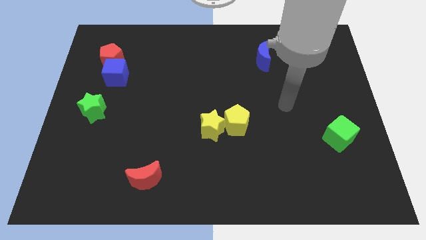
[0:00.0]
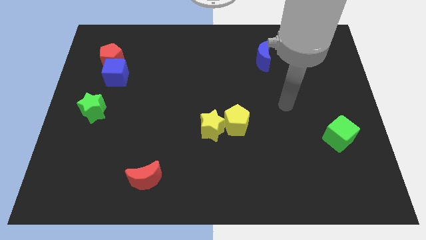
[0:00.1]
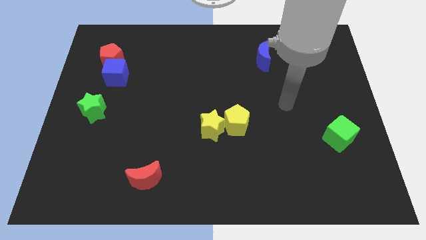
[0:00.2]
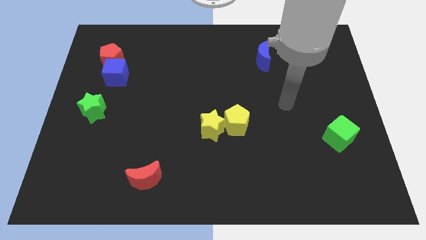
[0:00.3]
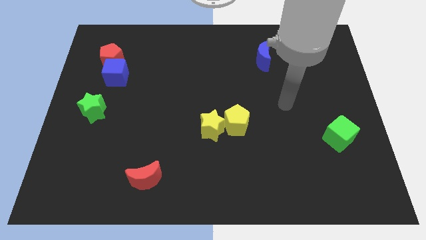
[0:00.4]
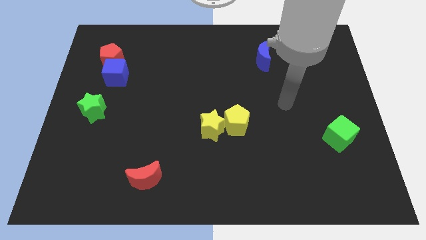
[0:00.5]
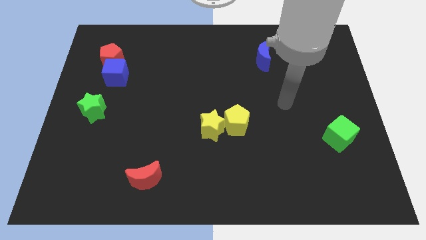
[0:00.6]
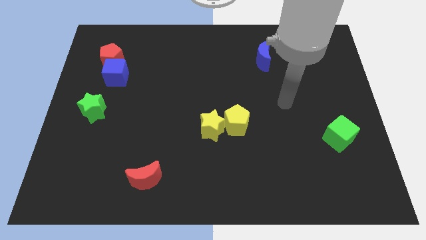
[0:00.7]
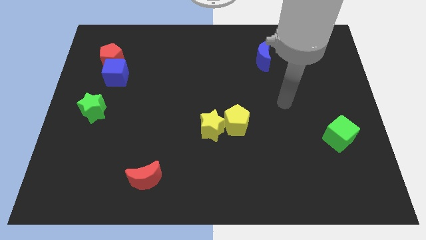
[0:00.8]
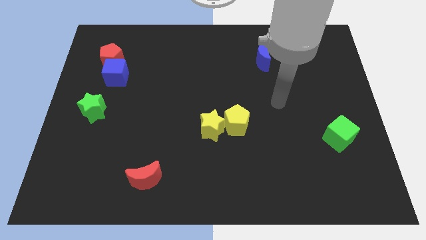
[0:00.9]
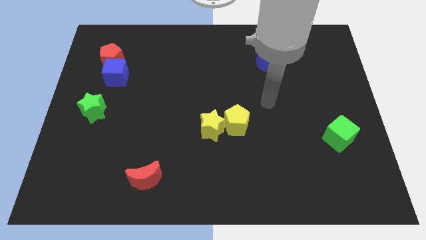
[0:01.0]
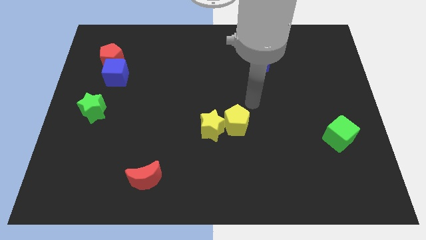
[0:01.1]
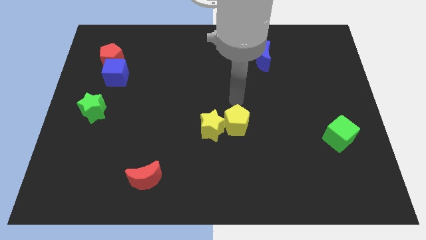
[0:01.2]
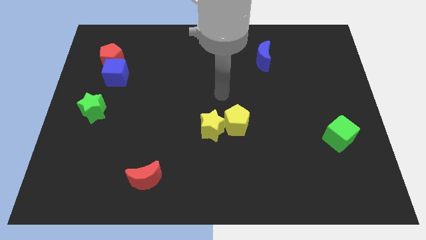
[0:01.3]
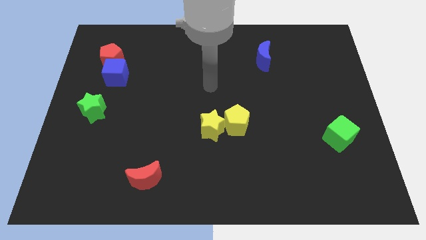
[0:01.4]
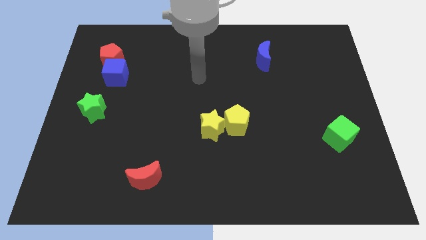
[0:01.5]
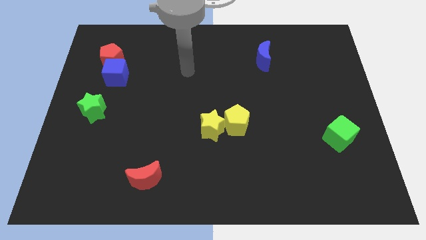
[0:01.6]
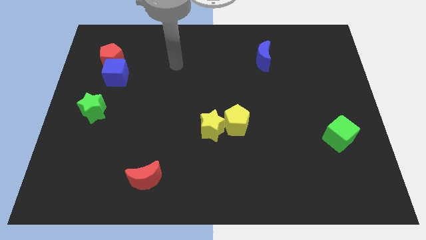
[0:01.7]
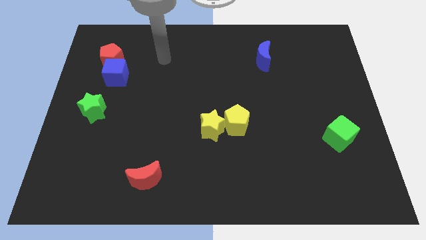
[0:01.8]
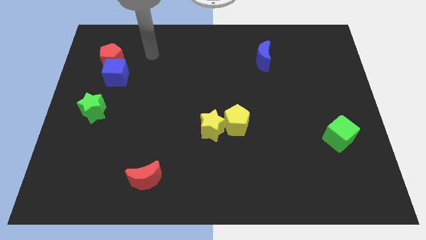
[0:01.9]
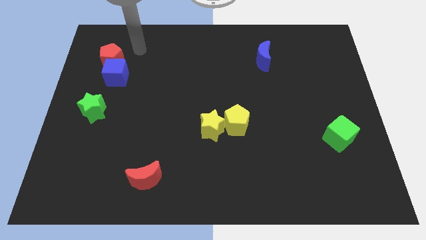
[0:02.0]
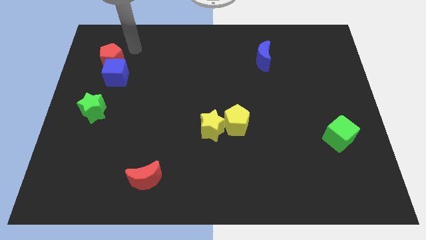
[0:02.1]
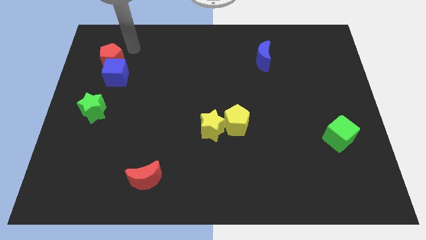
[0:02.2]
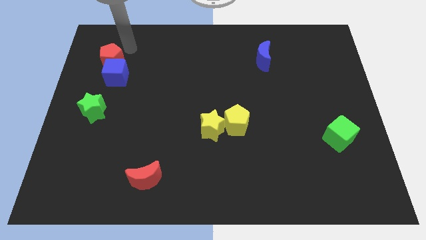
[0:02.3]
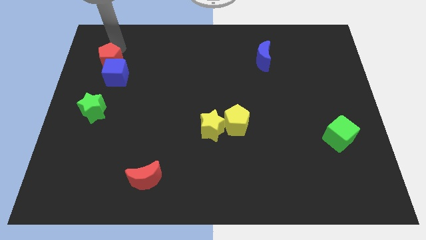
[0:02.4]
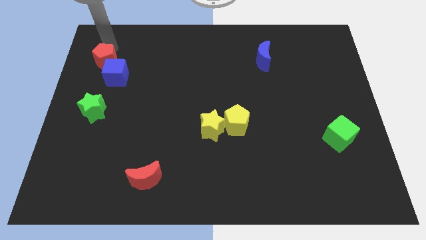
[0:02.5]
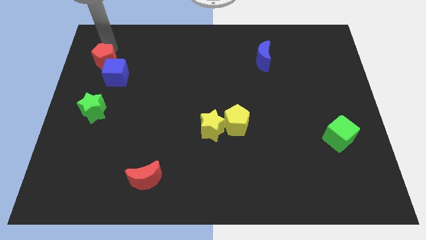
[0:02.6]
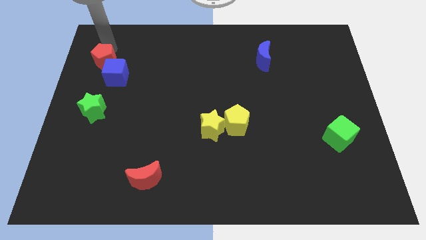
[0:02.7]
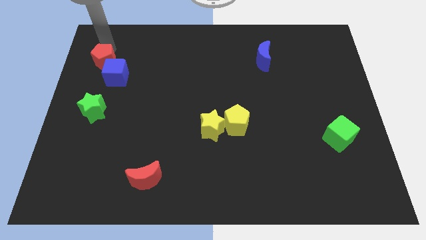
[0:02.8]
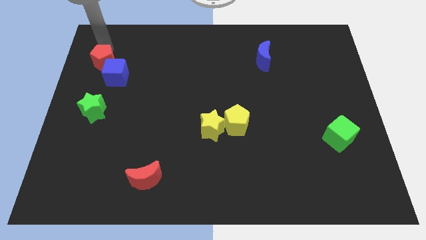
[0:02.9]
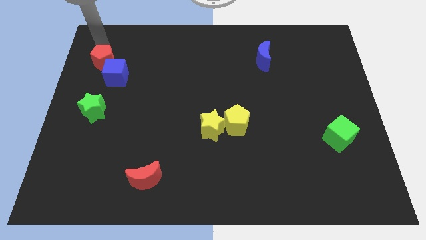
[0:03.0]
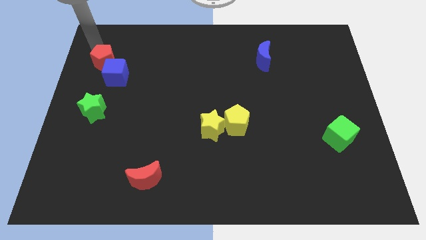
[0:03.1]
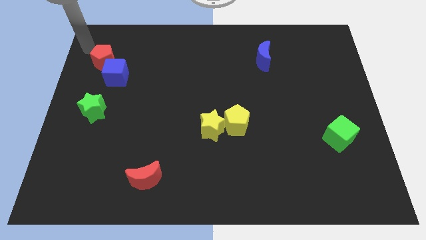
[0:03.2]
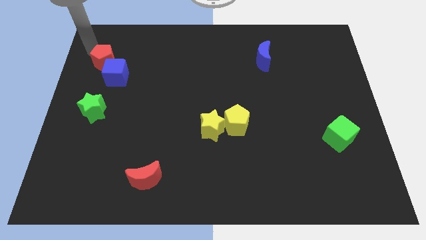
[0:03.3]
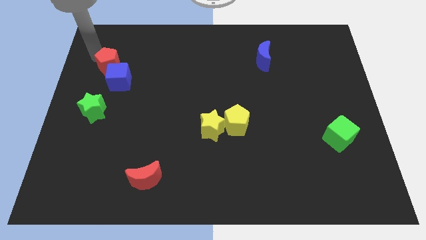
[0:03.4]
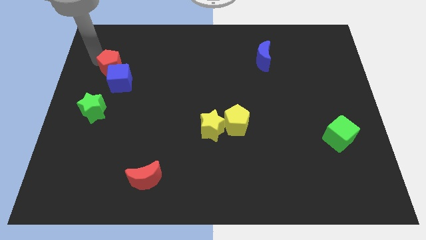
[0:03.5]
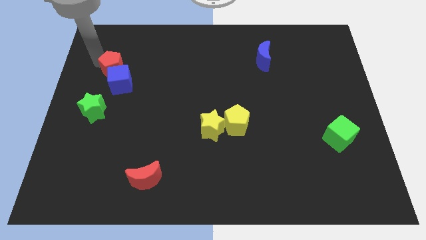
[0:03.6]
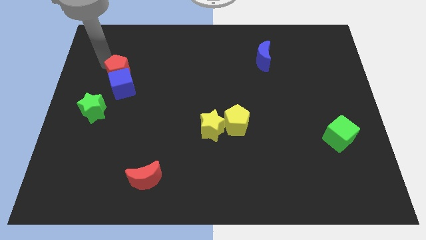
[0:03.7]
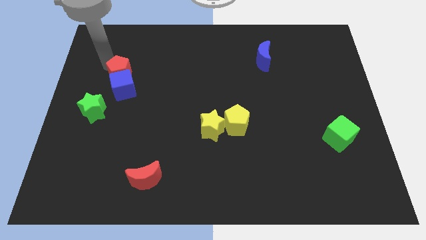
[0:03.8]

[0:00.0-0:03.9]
push the red pentagon and blue cube together slightly to the bottom side of the board

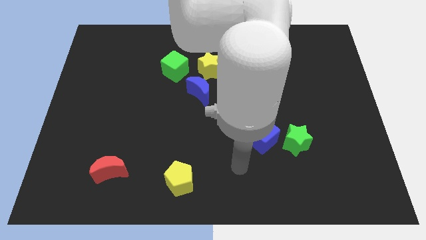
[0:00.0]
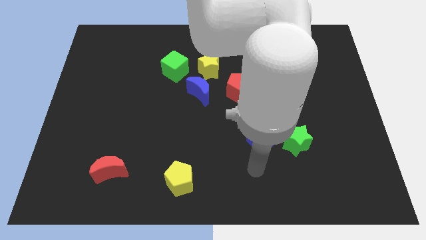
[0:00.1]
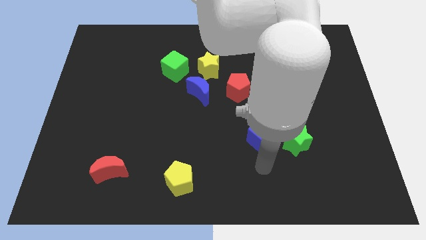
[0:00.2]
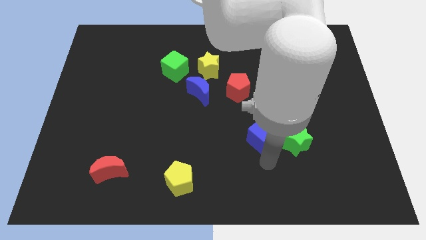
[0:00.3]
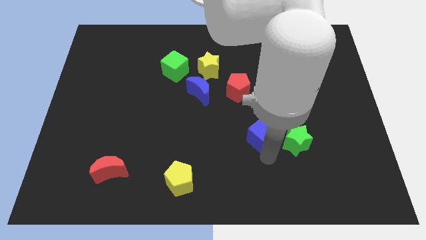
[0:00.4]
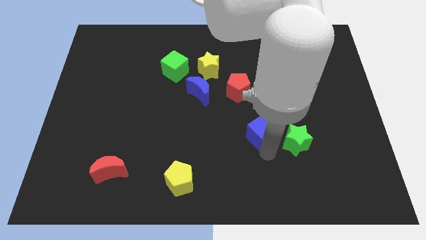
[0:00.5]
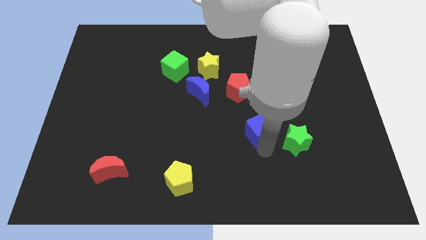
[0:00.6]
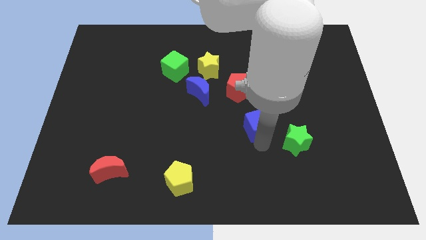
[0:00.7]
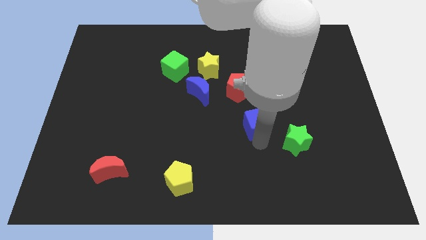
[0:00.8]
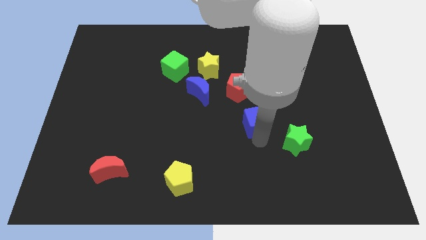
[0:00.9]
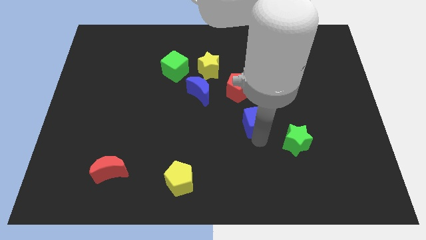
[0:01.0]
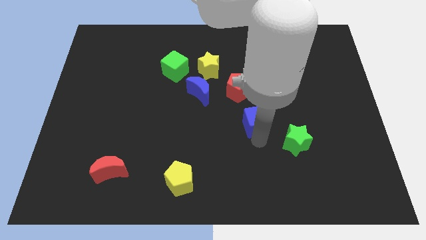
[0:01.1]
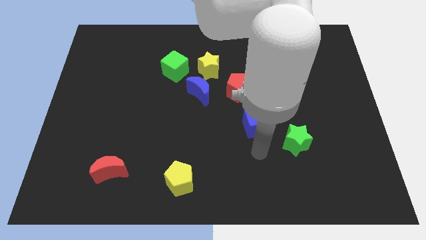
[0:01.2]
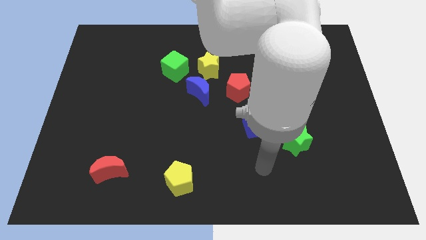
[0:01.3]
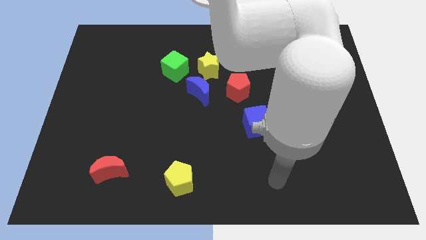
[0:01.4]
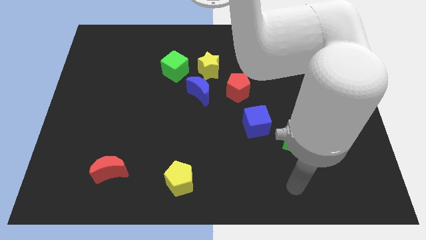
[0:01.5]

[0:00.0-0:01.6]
push the blue cube slightly towards the red pentagon

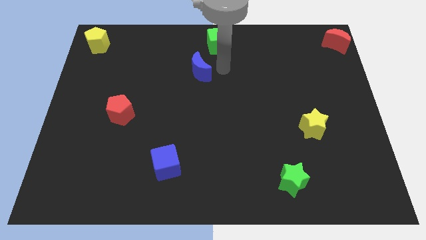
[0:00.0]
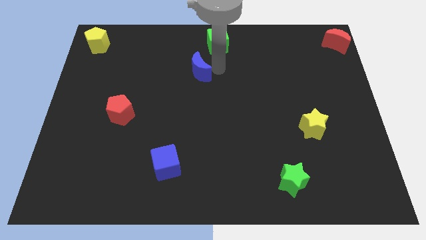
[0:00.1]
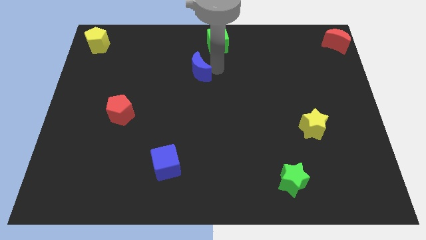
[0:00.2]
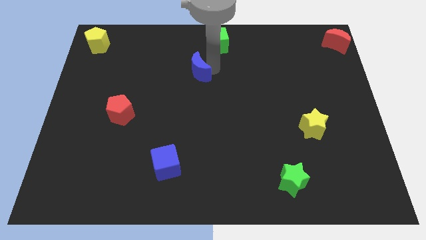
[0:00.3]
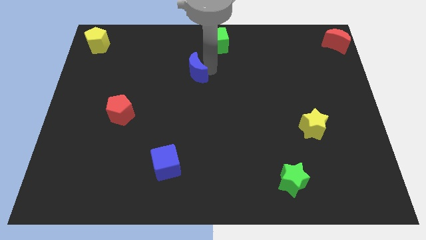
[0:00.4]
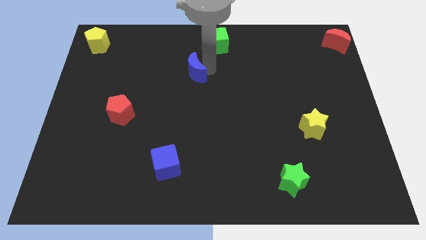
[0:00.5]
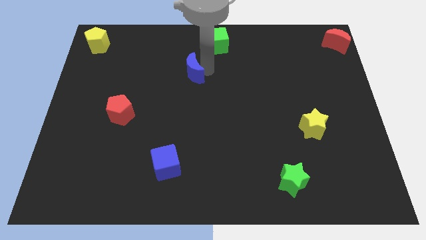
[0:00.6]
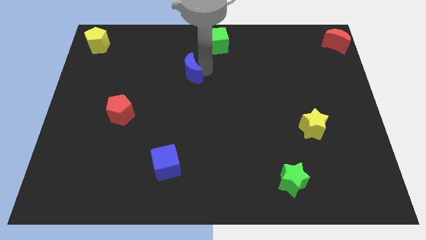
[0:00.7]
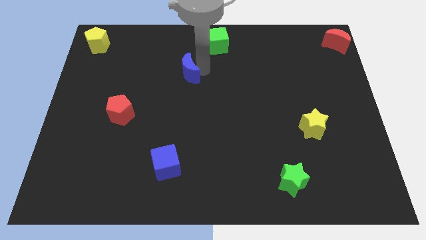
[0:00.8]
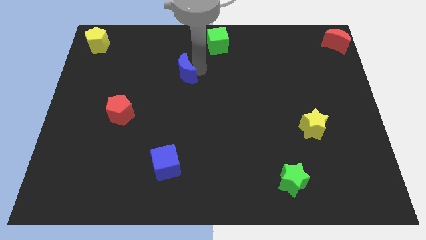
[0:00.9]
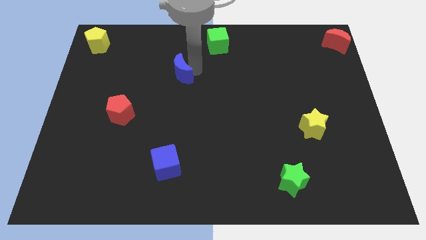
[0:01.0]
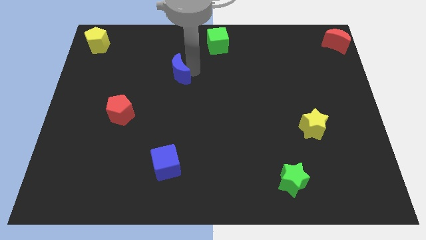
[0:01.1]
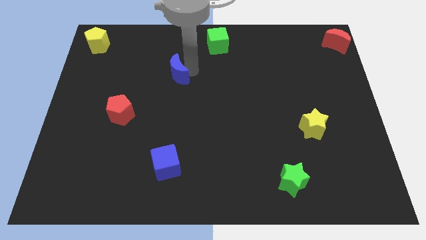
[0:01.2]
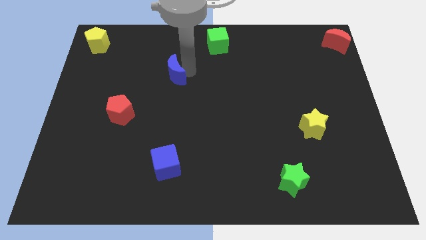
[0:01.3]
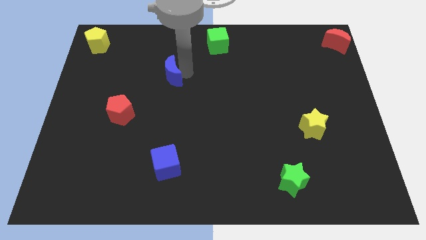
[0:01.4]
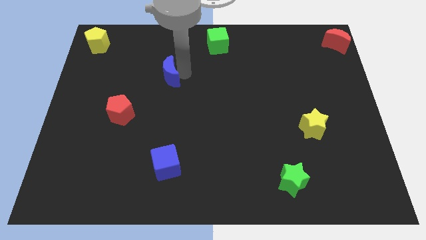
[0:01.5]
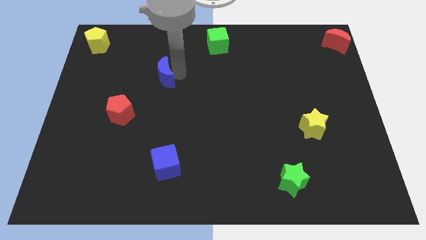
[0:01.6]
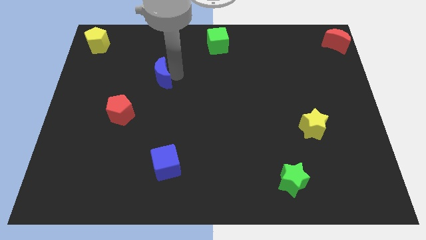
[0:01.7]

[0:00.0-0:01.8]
move the blue crescent to the left of the board

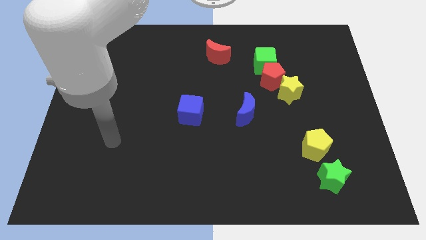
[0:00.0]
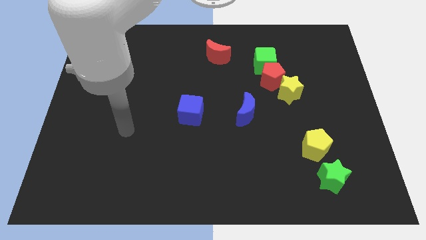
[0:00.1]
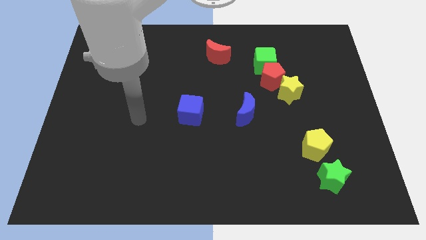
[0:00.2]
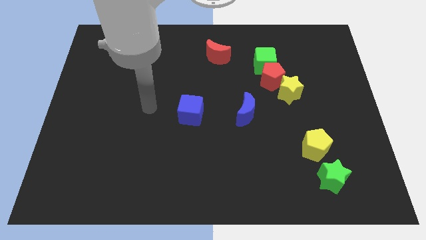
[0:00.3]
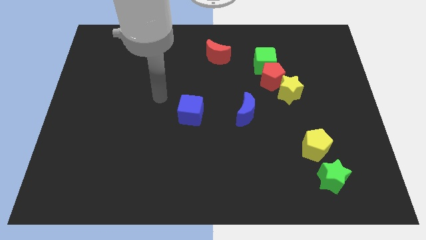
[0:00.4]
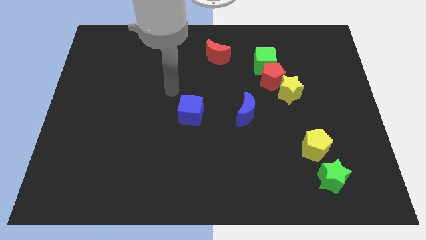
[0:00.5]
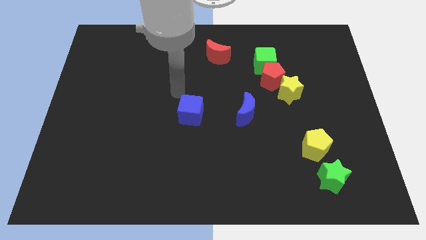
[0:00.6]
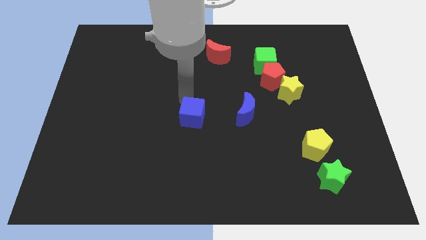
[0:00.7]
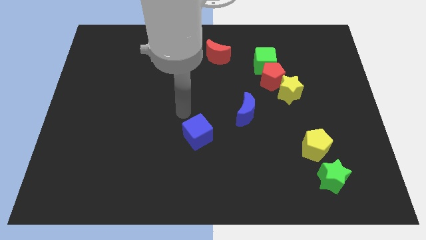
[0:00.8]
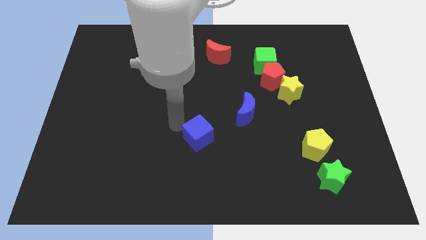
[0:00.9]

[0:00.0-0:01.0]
touch the blue cube

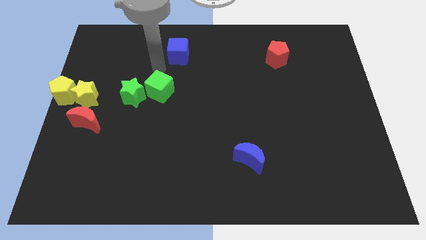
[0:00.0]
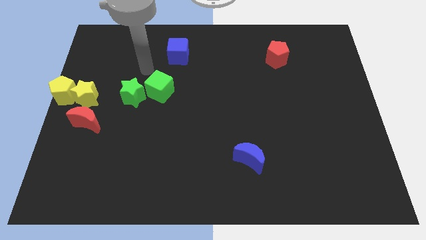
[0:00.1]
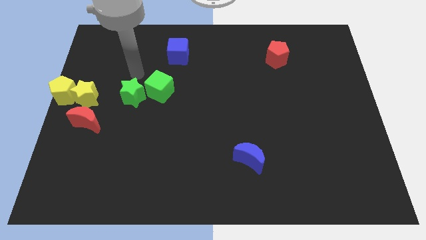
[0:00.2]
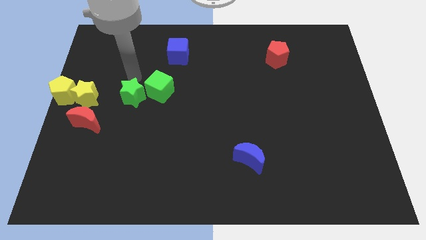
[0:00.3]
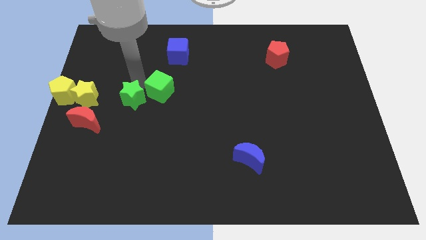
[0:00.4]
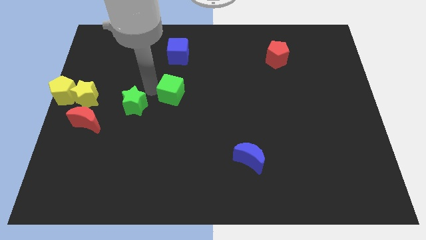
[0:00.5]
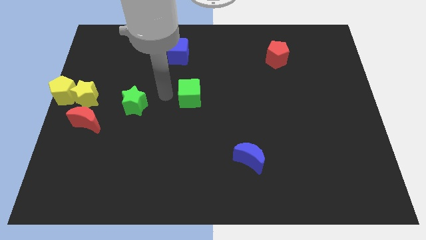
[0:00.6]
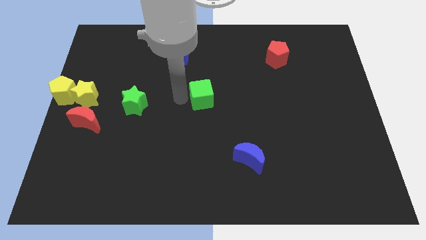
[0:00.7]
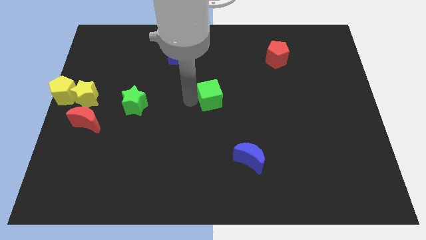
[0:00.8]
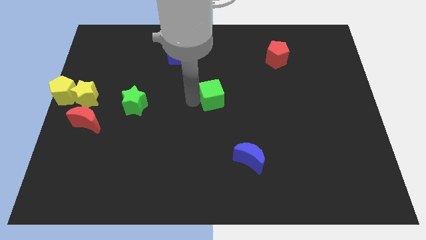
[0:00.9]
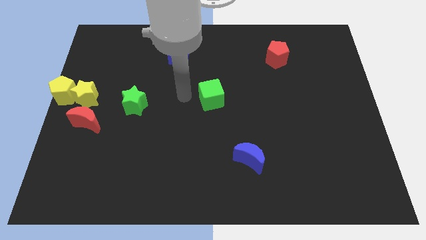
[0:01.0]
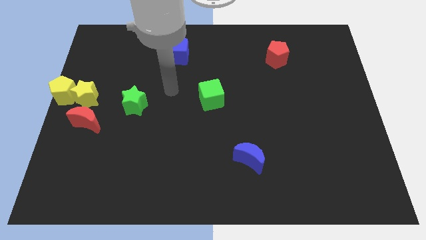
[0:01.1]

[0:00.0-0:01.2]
place the green cube at the center of the board
